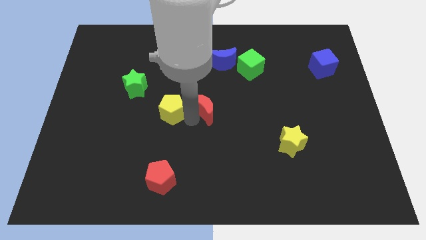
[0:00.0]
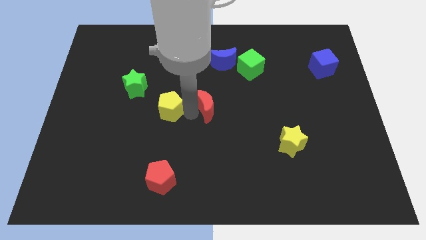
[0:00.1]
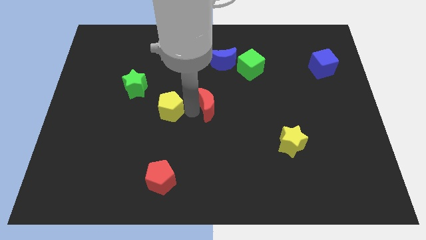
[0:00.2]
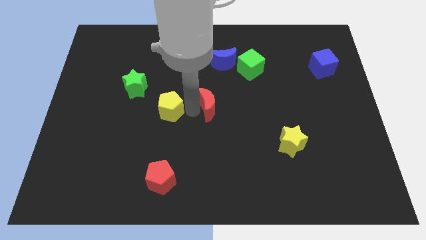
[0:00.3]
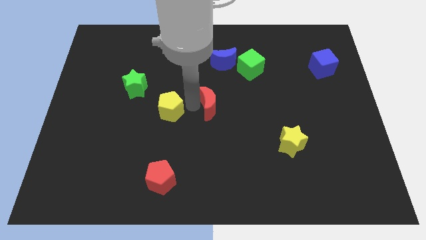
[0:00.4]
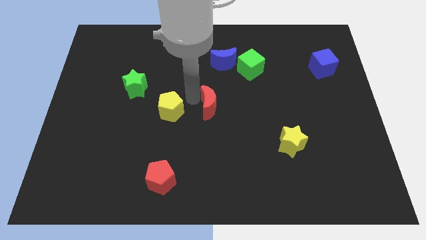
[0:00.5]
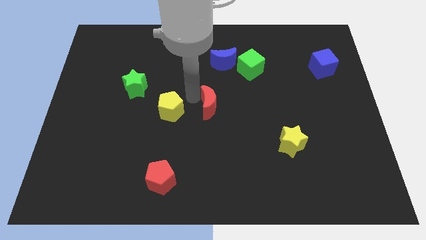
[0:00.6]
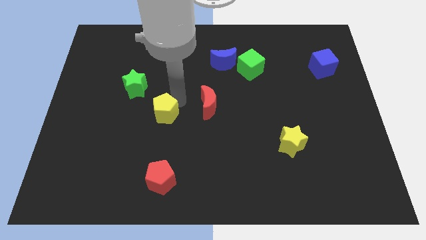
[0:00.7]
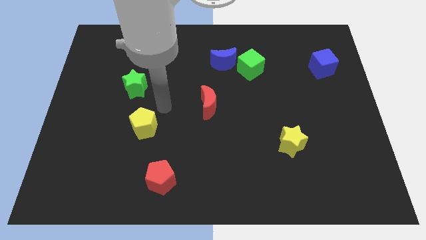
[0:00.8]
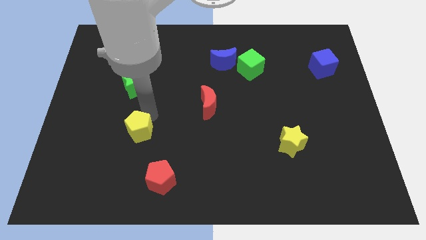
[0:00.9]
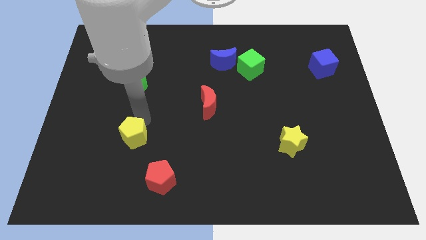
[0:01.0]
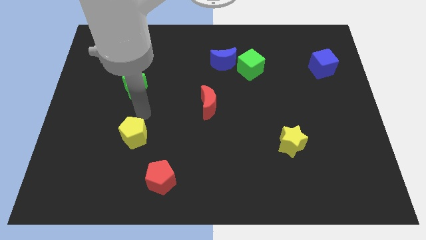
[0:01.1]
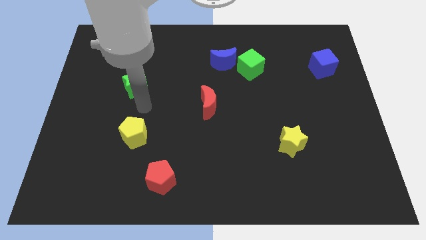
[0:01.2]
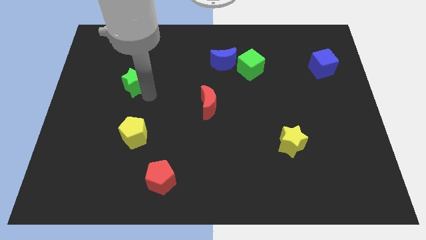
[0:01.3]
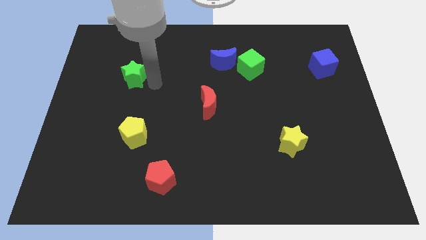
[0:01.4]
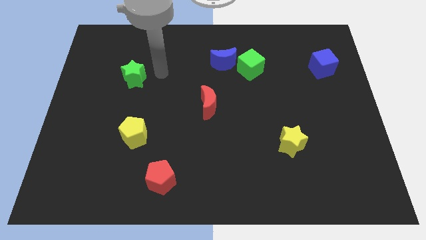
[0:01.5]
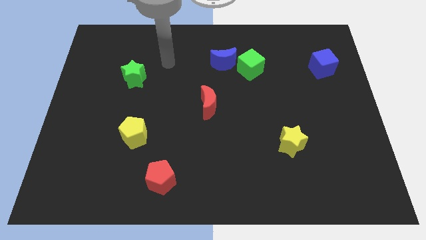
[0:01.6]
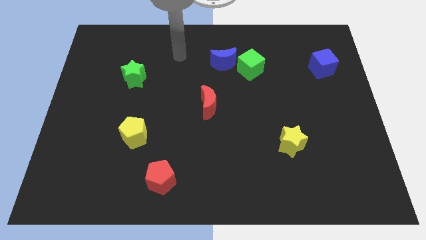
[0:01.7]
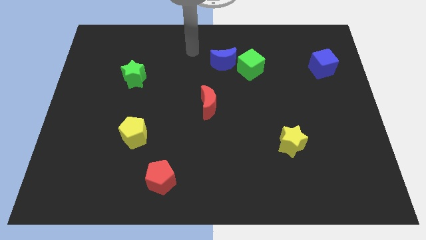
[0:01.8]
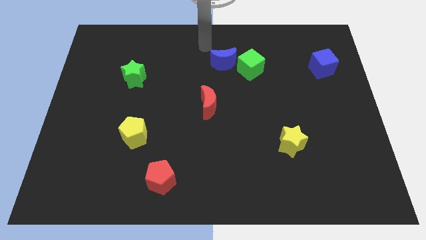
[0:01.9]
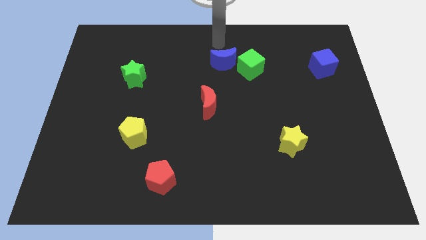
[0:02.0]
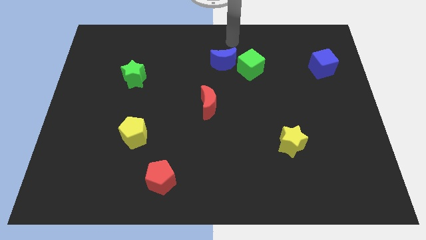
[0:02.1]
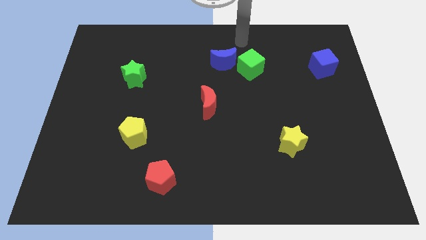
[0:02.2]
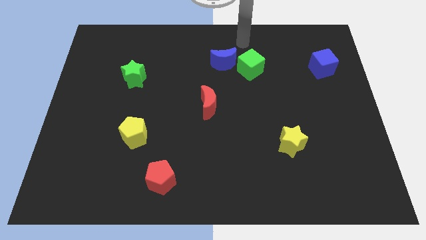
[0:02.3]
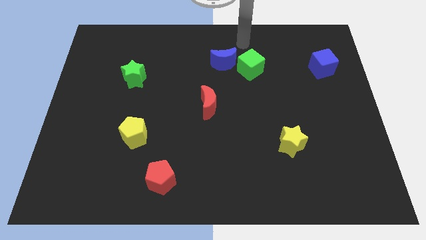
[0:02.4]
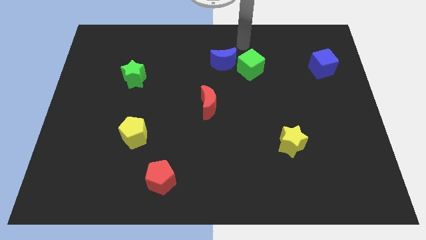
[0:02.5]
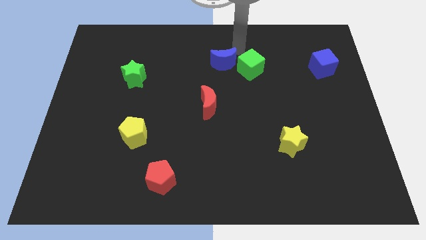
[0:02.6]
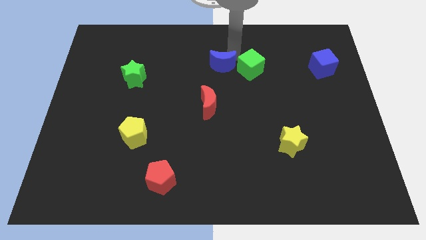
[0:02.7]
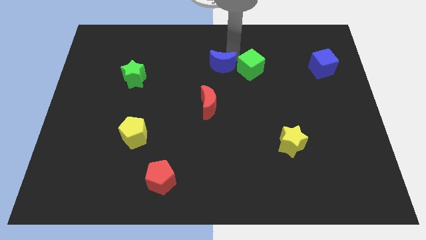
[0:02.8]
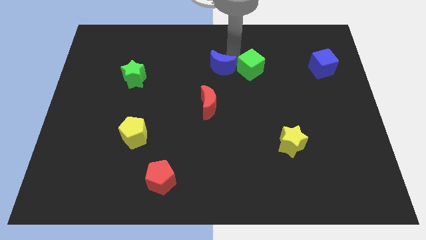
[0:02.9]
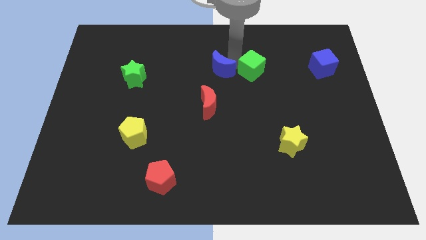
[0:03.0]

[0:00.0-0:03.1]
seprate the yellow pentagon from the red moon

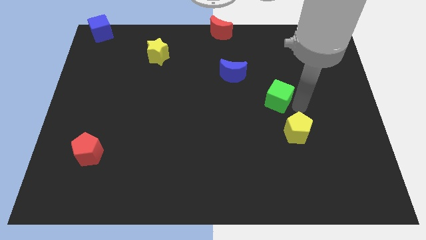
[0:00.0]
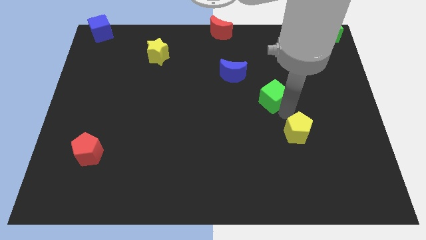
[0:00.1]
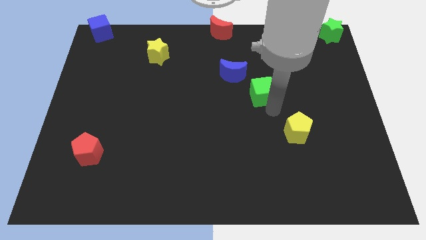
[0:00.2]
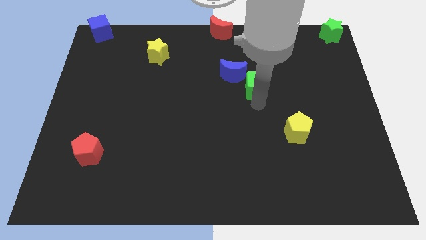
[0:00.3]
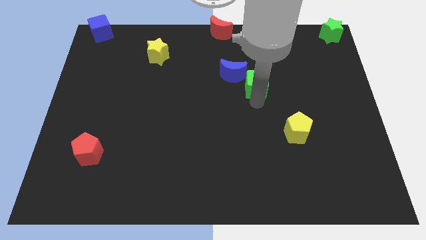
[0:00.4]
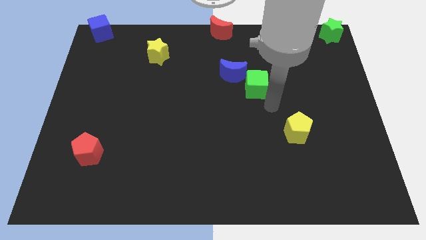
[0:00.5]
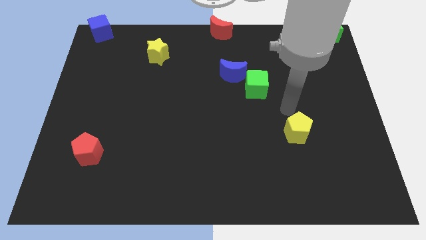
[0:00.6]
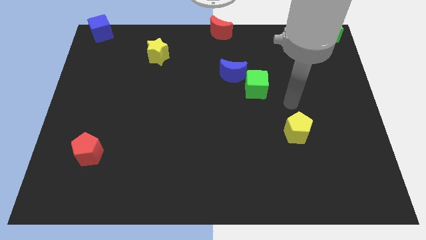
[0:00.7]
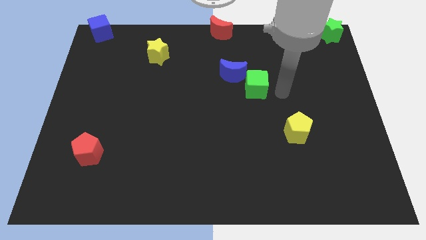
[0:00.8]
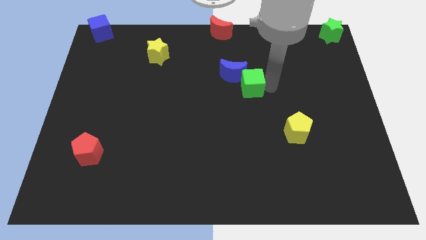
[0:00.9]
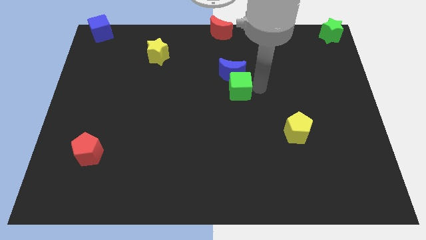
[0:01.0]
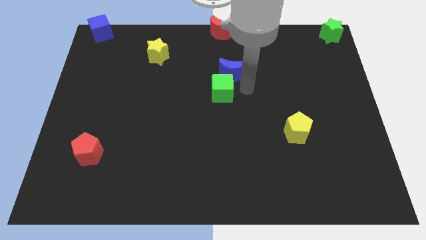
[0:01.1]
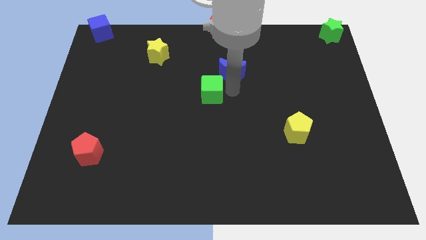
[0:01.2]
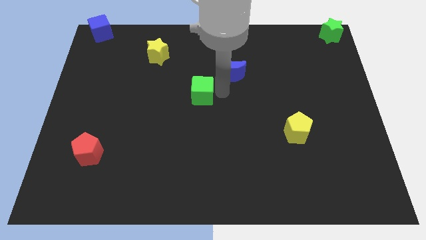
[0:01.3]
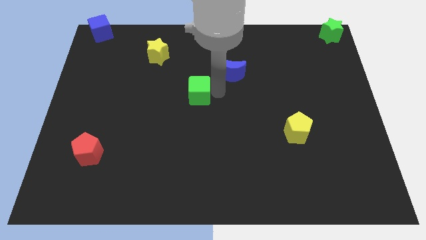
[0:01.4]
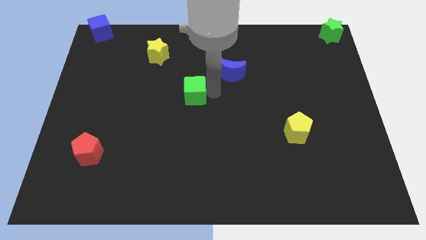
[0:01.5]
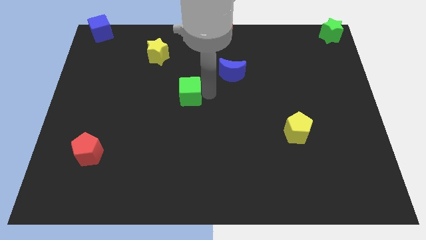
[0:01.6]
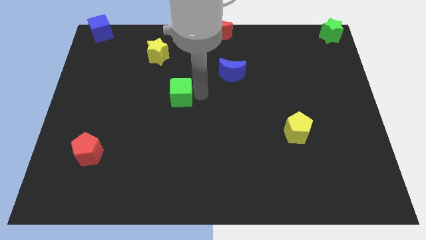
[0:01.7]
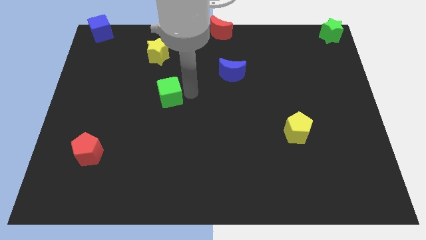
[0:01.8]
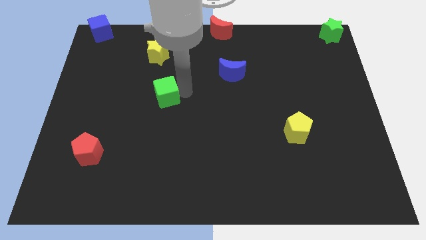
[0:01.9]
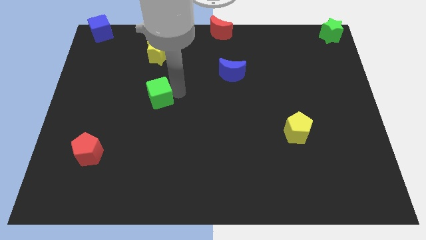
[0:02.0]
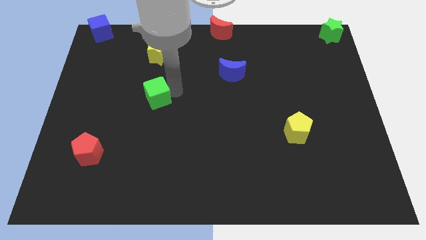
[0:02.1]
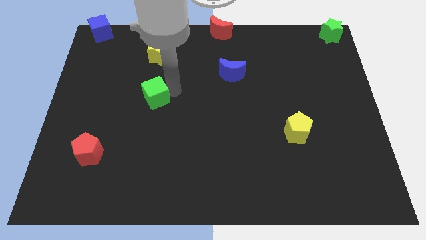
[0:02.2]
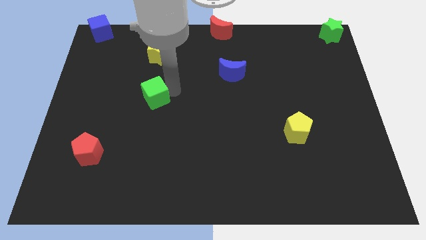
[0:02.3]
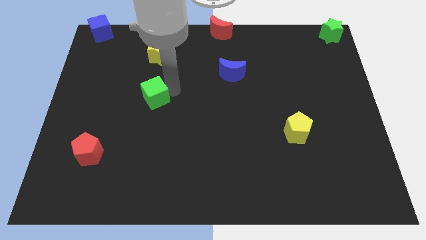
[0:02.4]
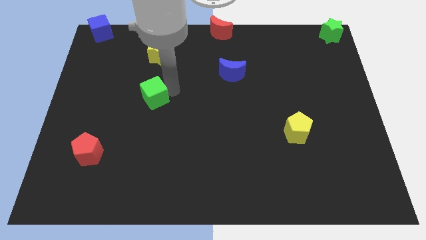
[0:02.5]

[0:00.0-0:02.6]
move the green cube below the yellow star

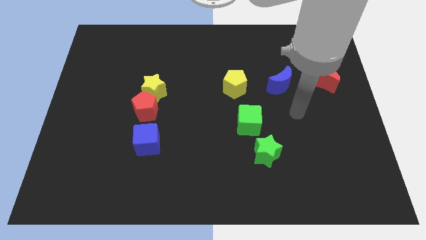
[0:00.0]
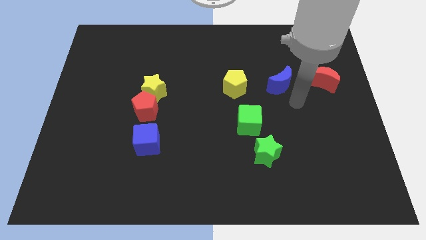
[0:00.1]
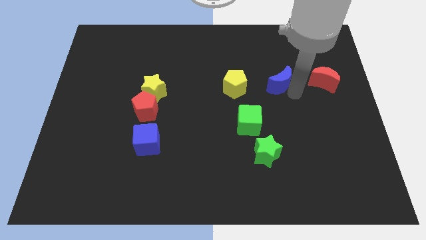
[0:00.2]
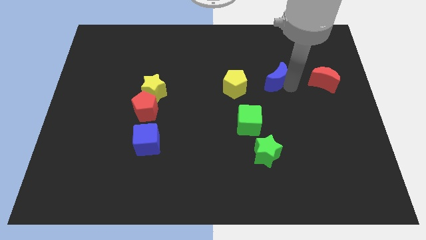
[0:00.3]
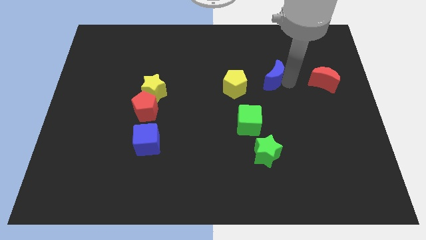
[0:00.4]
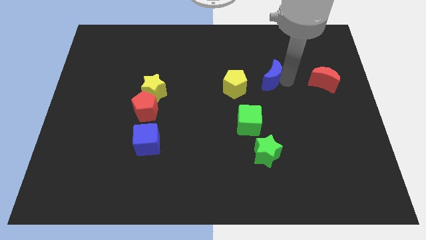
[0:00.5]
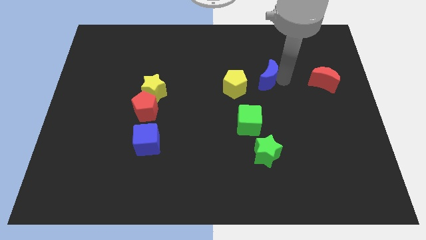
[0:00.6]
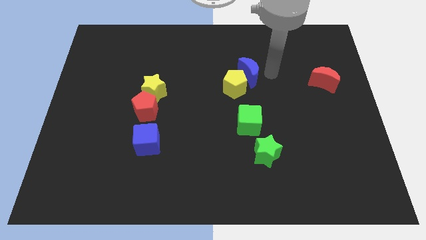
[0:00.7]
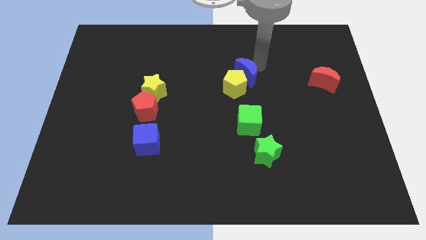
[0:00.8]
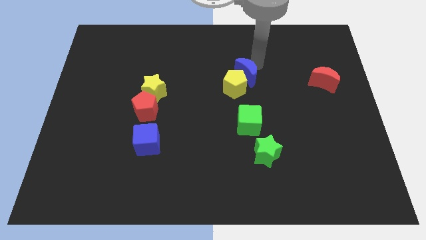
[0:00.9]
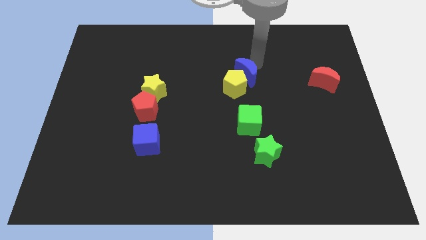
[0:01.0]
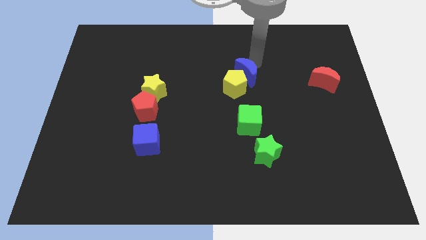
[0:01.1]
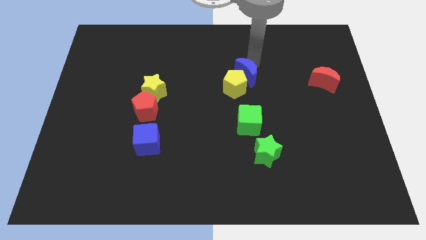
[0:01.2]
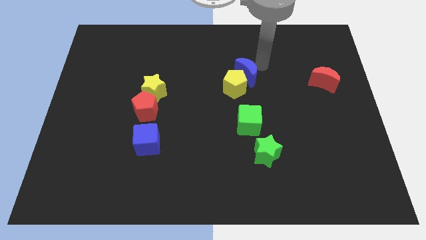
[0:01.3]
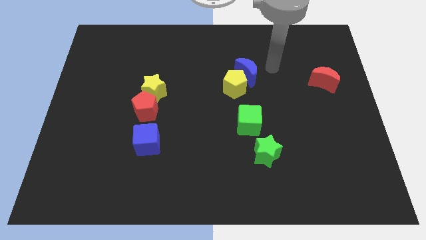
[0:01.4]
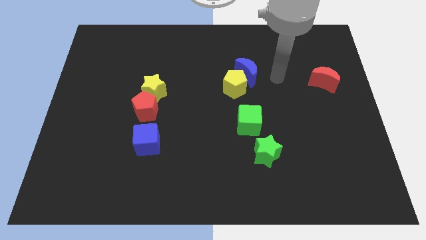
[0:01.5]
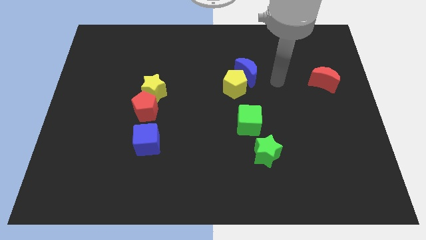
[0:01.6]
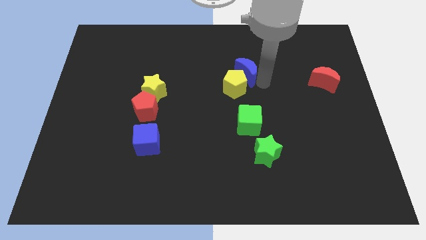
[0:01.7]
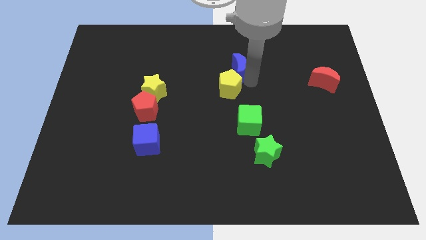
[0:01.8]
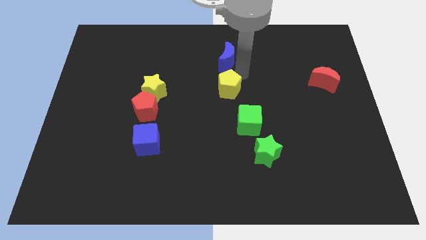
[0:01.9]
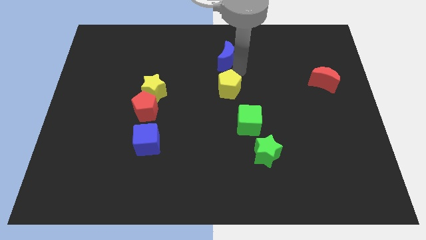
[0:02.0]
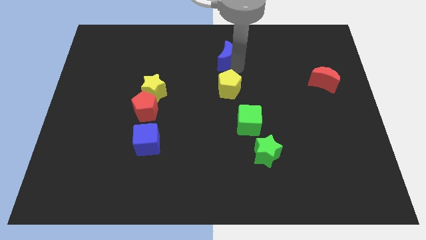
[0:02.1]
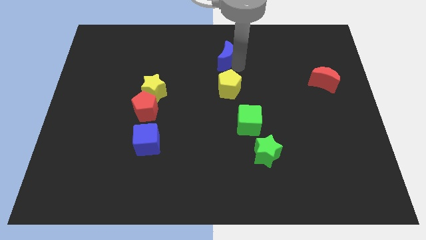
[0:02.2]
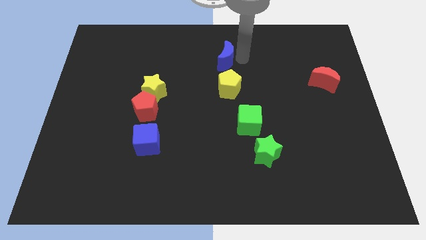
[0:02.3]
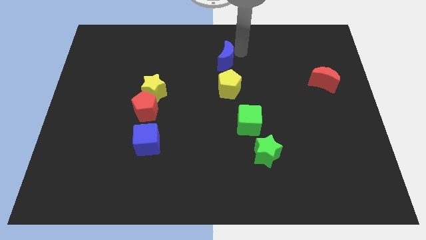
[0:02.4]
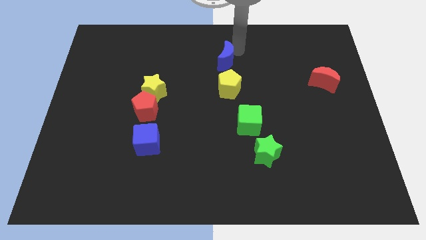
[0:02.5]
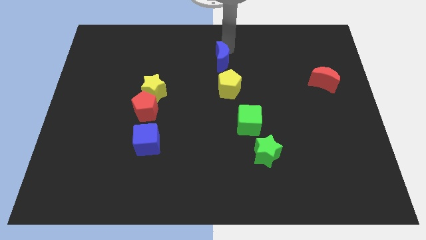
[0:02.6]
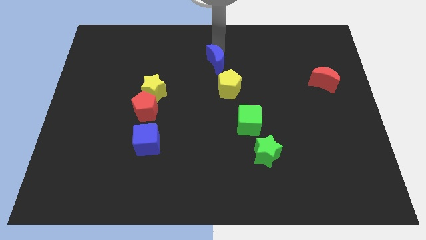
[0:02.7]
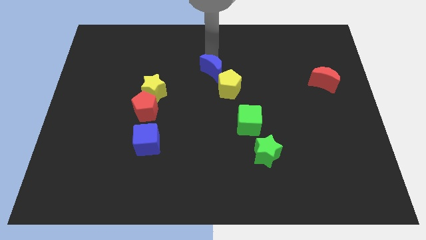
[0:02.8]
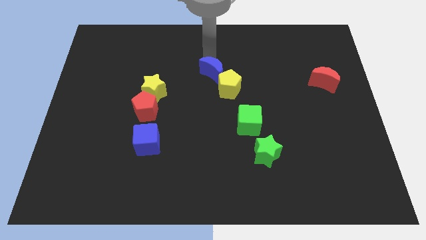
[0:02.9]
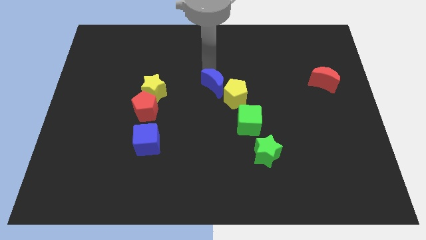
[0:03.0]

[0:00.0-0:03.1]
slide blue moon into yellow pentagon
